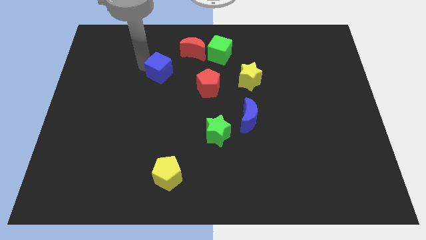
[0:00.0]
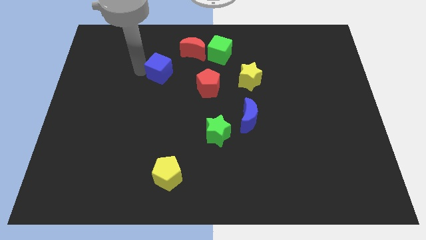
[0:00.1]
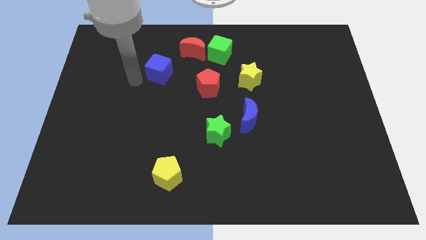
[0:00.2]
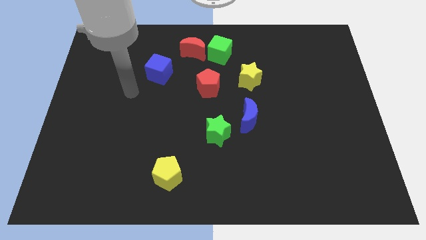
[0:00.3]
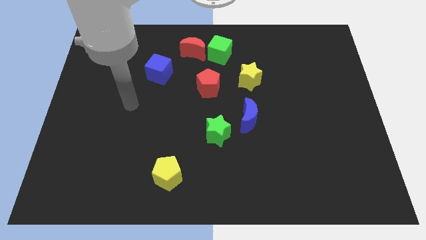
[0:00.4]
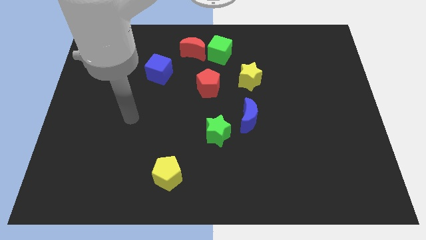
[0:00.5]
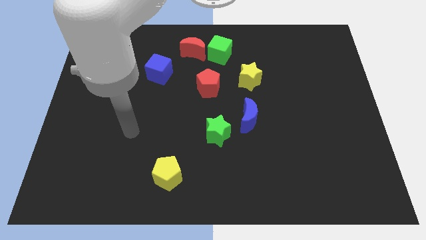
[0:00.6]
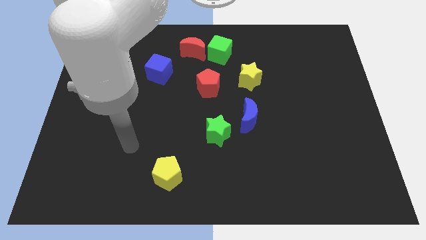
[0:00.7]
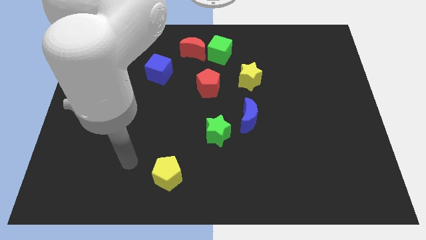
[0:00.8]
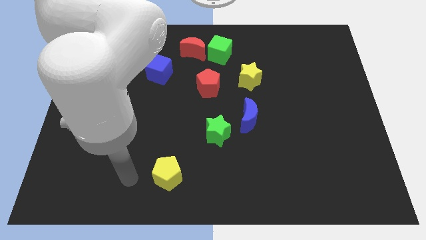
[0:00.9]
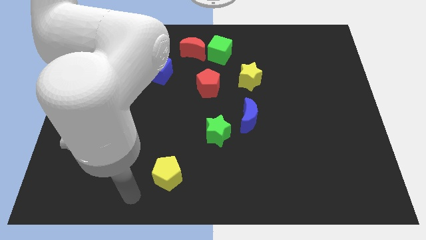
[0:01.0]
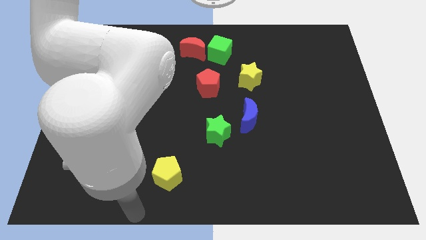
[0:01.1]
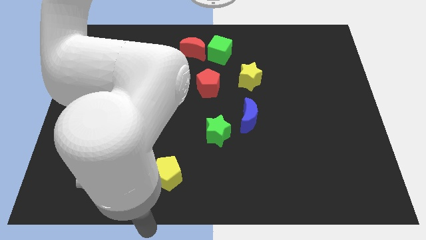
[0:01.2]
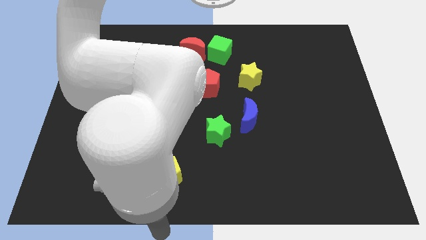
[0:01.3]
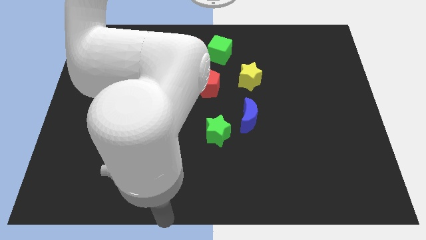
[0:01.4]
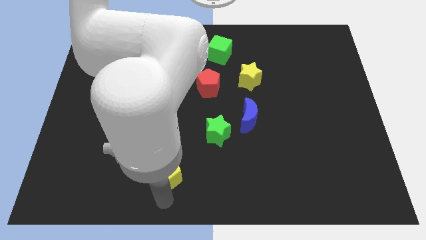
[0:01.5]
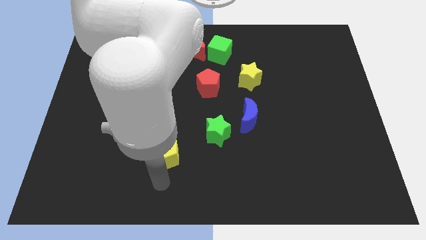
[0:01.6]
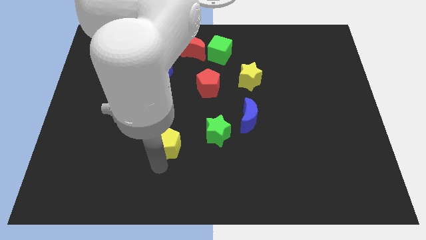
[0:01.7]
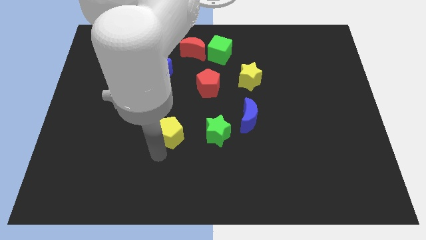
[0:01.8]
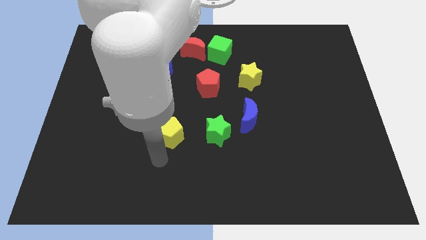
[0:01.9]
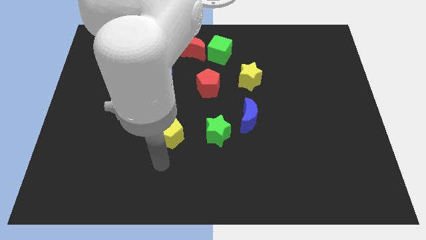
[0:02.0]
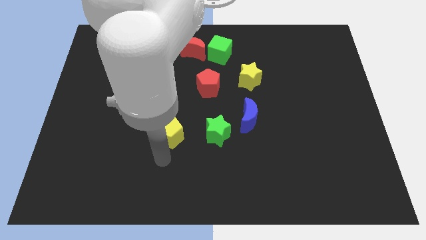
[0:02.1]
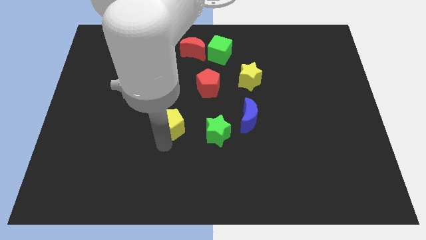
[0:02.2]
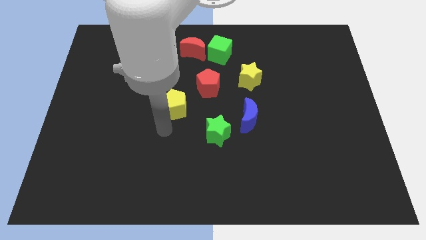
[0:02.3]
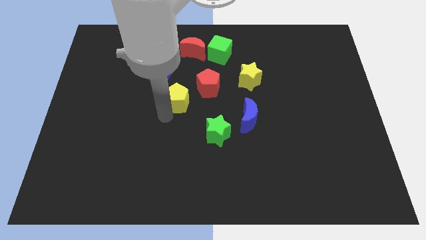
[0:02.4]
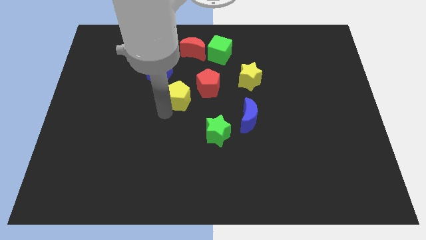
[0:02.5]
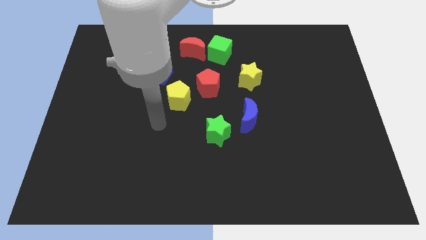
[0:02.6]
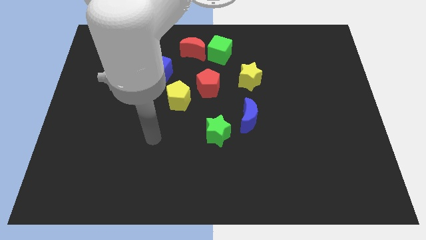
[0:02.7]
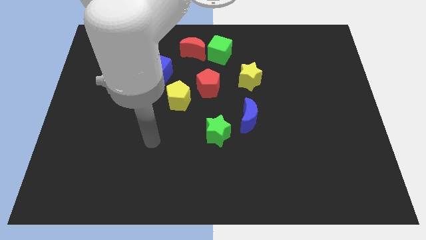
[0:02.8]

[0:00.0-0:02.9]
drag the yellow pentagon diagonally top left to the green star

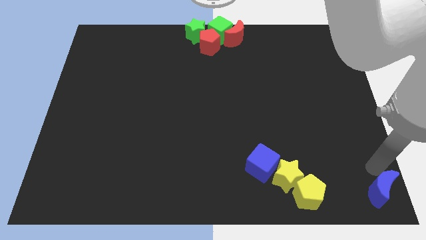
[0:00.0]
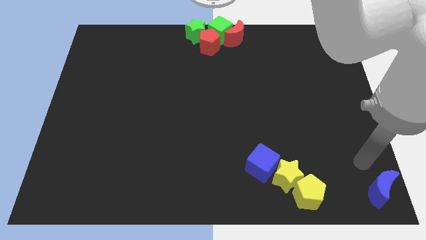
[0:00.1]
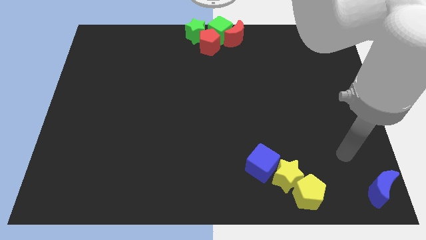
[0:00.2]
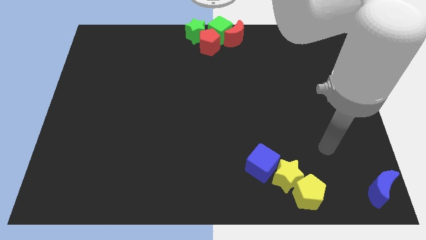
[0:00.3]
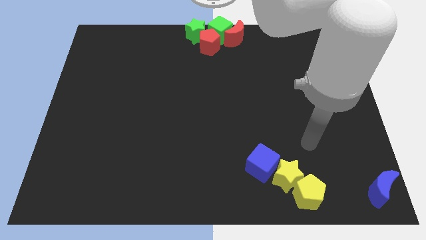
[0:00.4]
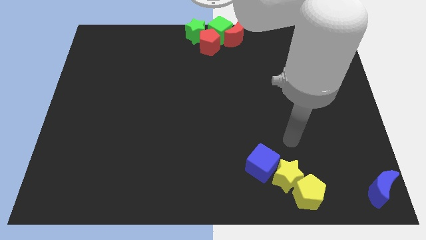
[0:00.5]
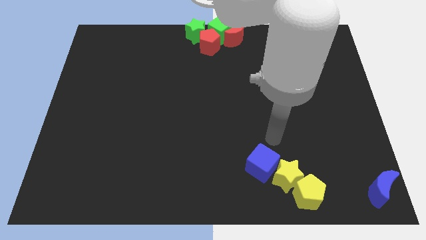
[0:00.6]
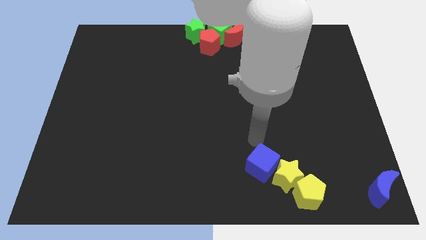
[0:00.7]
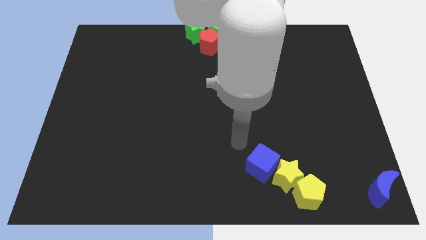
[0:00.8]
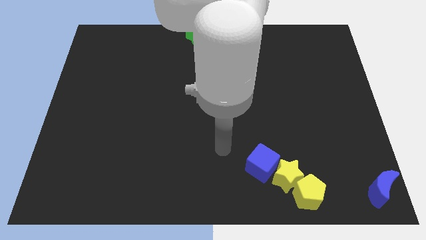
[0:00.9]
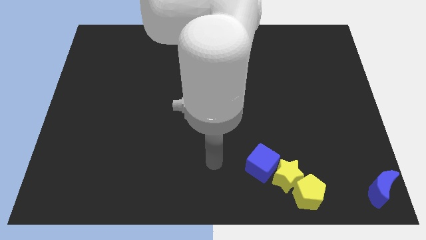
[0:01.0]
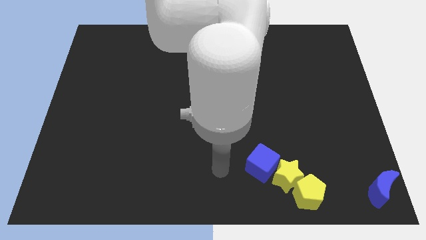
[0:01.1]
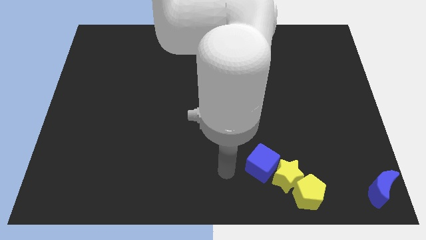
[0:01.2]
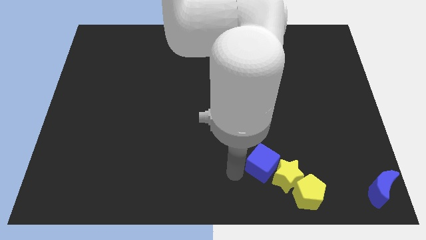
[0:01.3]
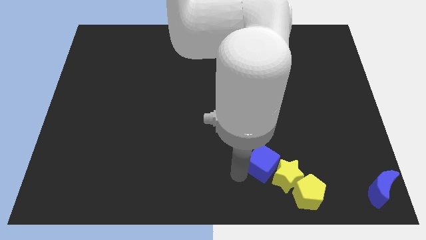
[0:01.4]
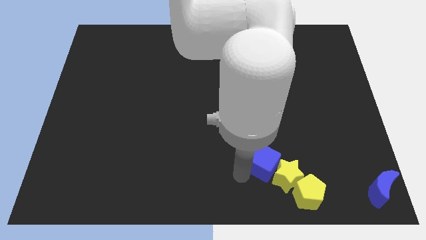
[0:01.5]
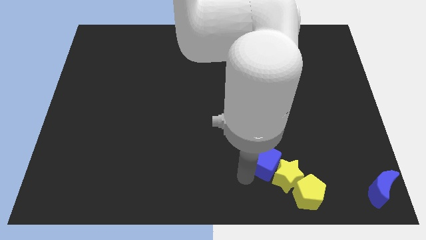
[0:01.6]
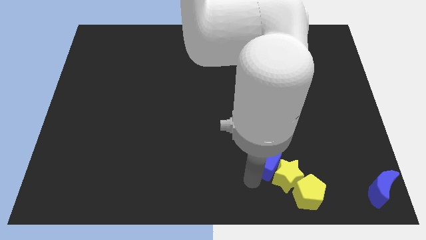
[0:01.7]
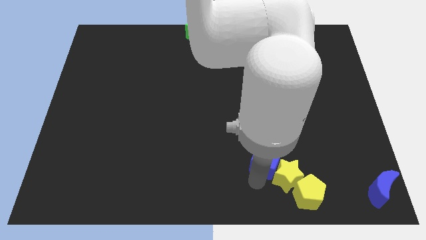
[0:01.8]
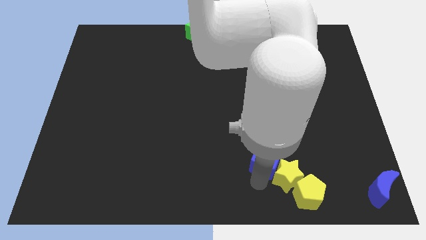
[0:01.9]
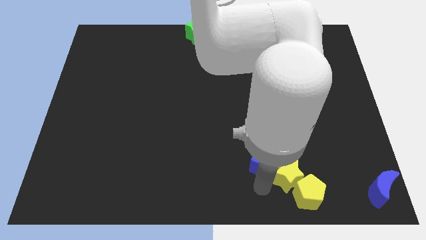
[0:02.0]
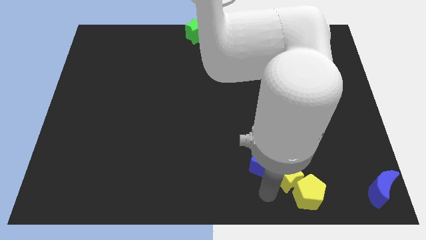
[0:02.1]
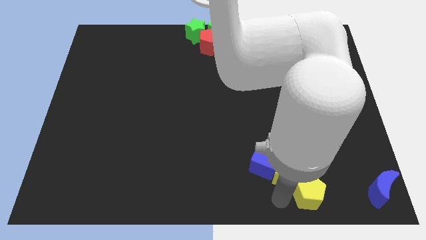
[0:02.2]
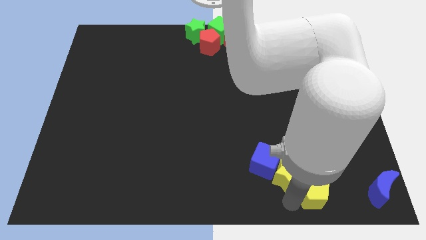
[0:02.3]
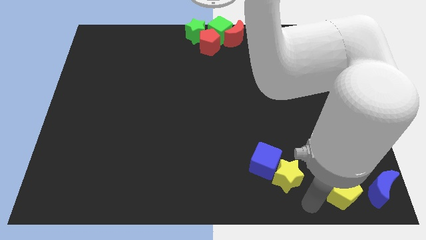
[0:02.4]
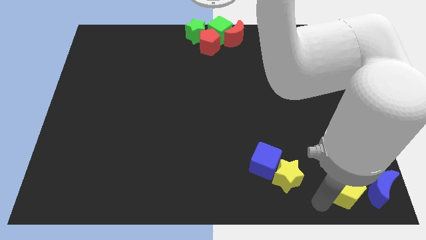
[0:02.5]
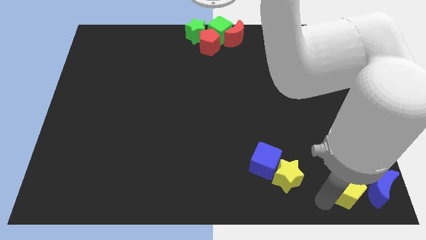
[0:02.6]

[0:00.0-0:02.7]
separate the yellow star and yellow pentagon

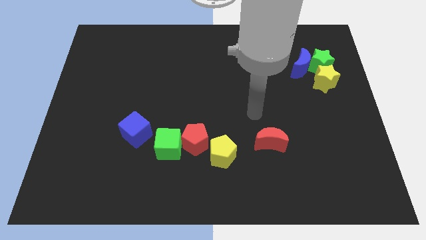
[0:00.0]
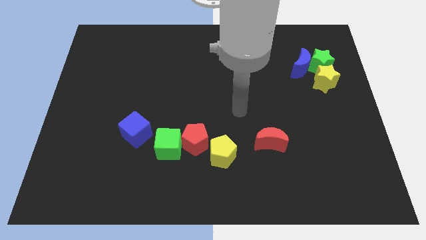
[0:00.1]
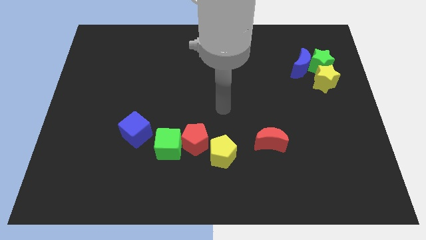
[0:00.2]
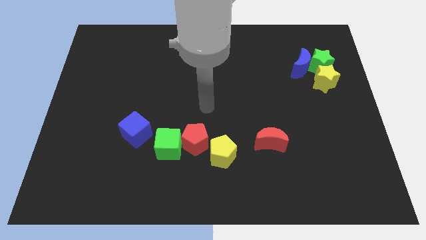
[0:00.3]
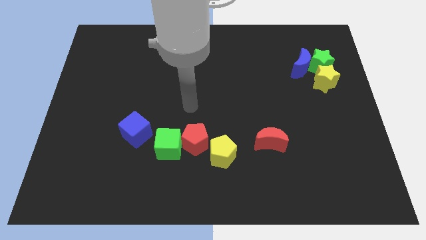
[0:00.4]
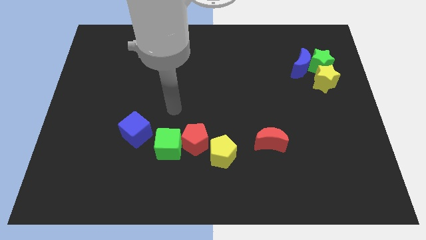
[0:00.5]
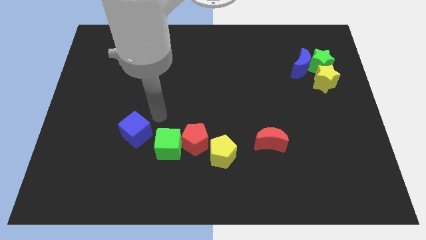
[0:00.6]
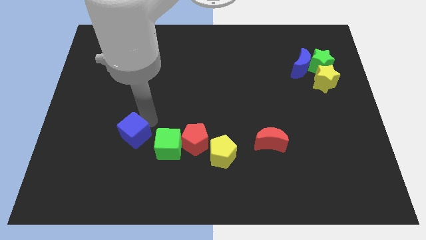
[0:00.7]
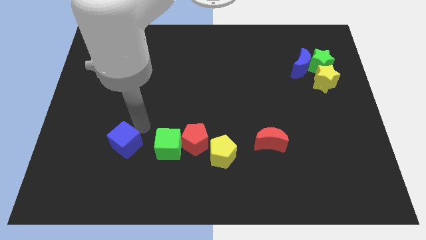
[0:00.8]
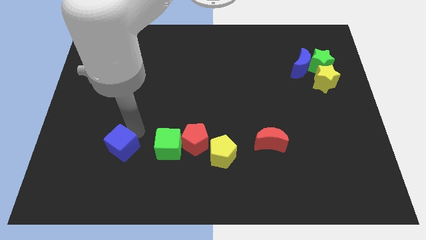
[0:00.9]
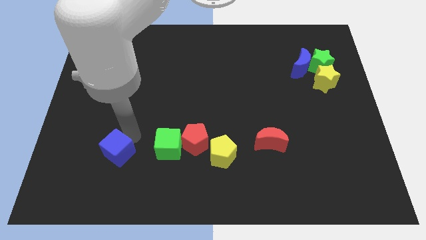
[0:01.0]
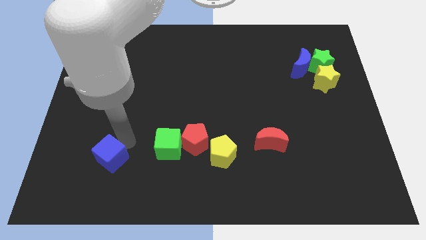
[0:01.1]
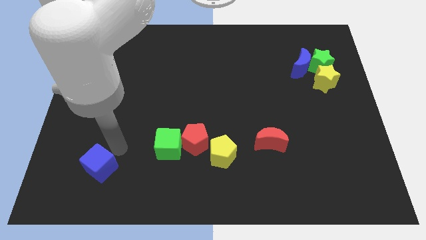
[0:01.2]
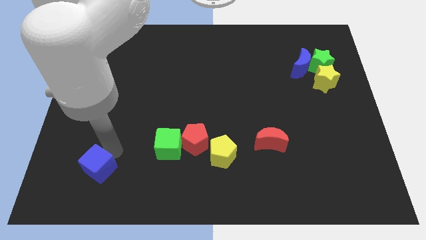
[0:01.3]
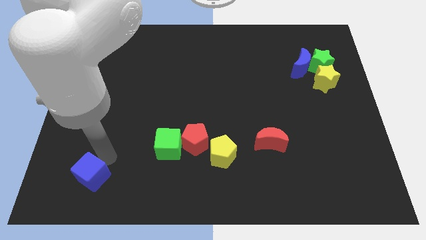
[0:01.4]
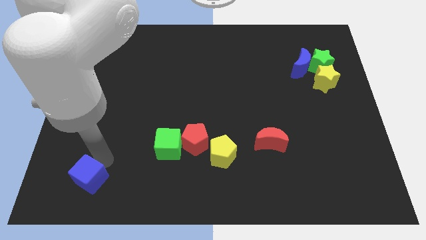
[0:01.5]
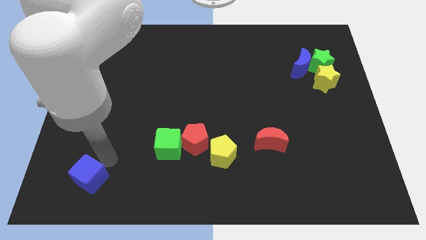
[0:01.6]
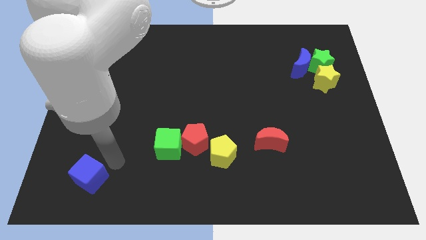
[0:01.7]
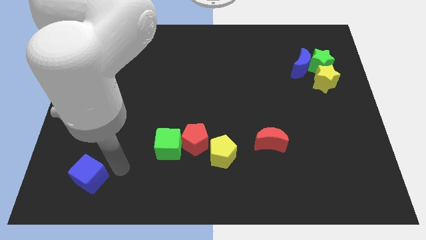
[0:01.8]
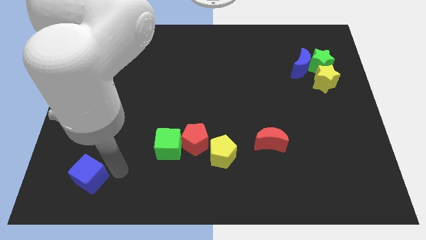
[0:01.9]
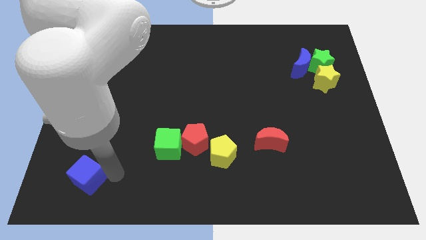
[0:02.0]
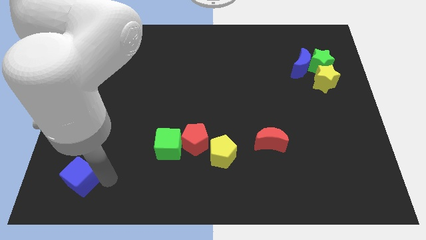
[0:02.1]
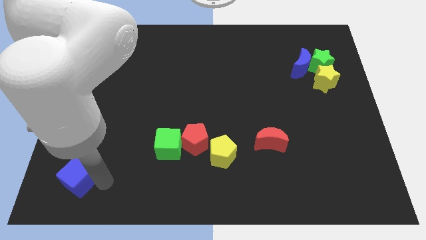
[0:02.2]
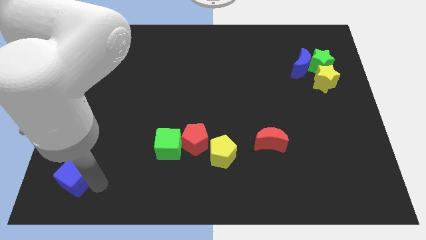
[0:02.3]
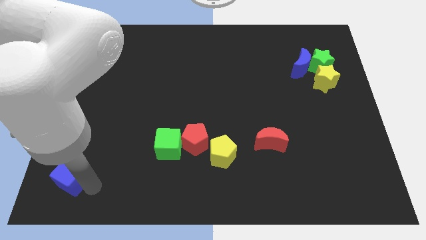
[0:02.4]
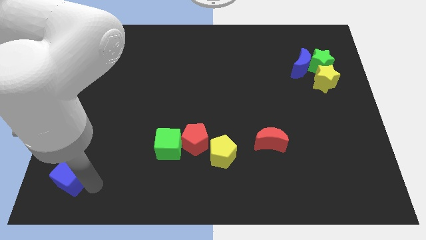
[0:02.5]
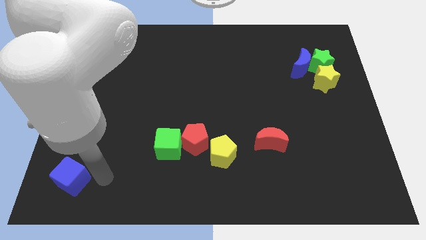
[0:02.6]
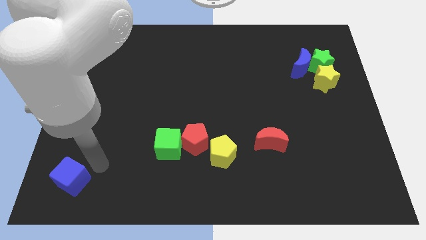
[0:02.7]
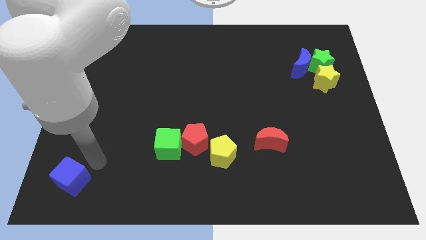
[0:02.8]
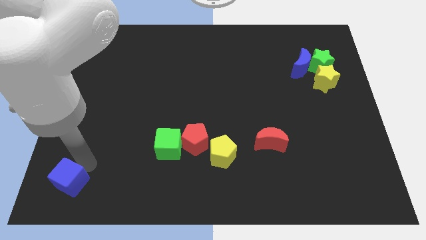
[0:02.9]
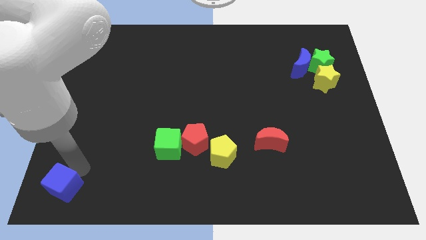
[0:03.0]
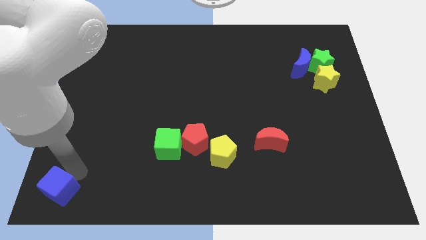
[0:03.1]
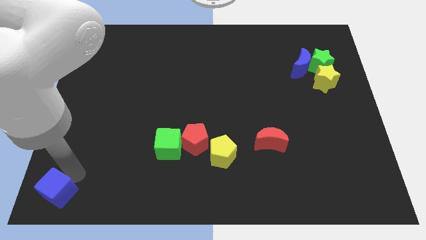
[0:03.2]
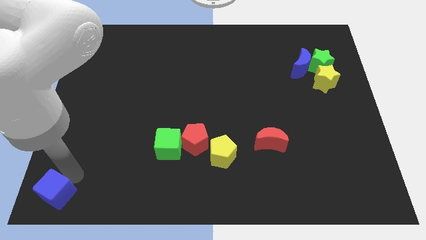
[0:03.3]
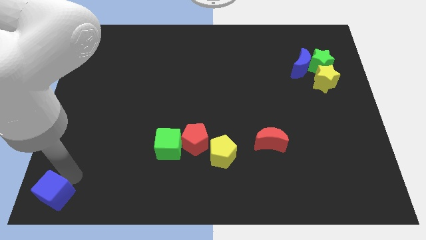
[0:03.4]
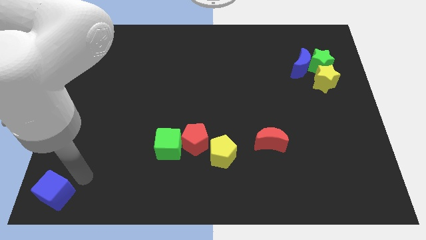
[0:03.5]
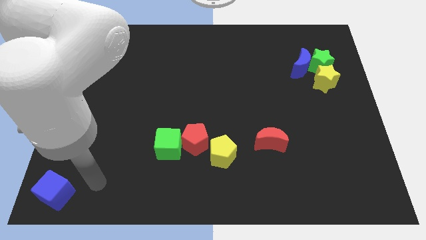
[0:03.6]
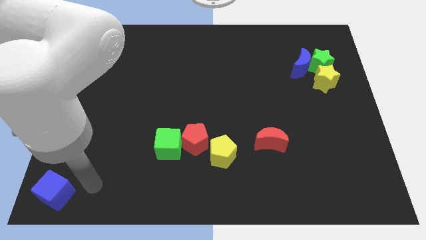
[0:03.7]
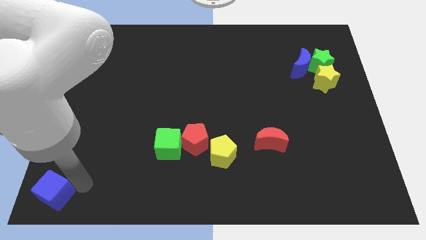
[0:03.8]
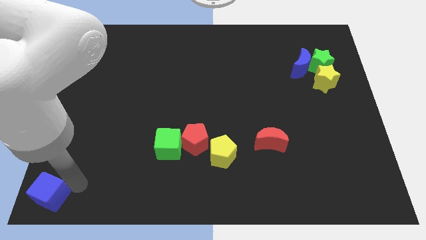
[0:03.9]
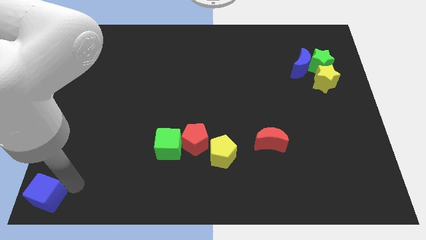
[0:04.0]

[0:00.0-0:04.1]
move the blue cube to the bottom left corner of the board
